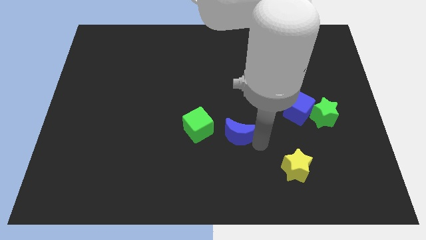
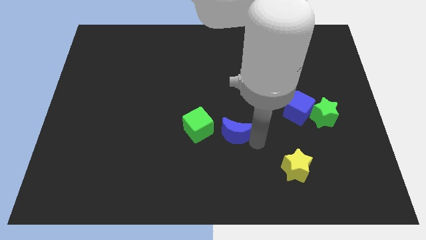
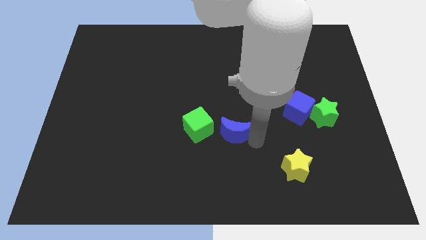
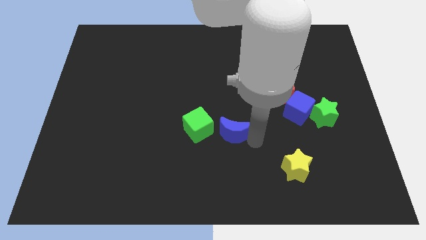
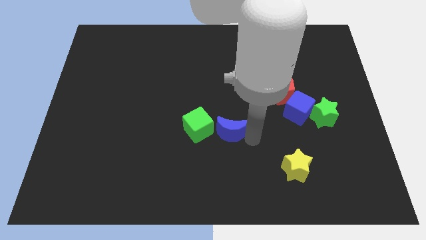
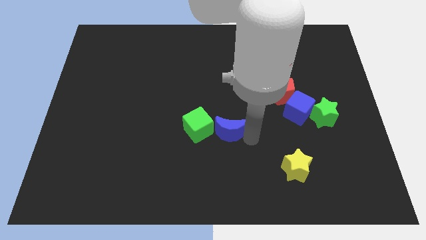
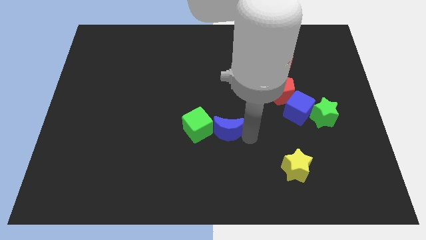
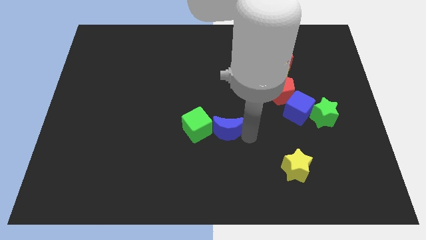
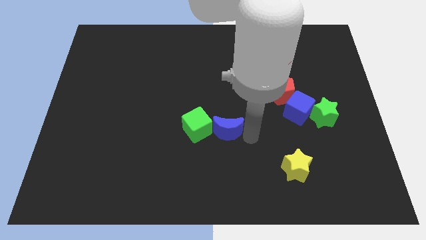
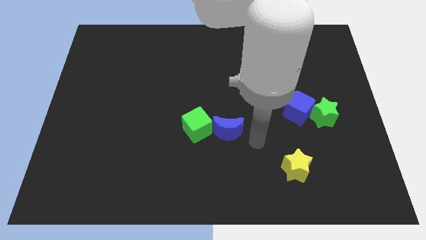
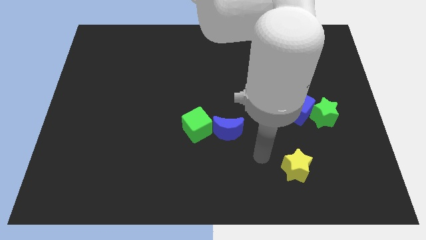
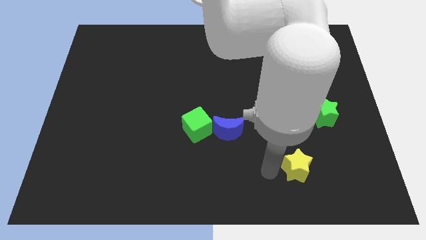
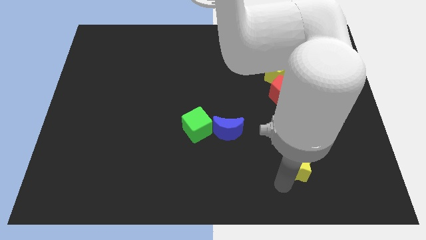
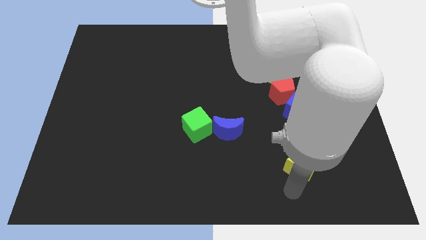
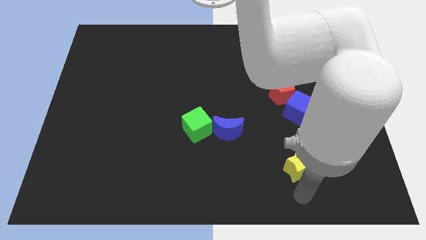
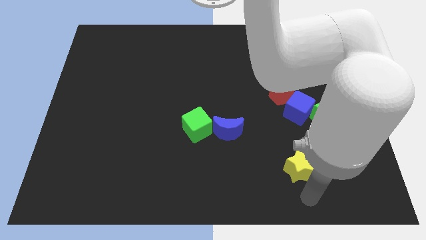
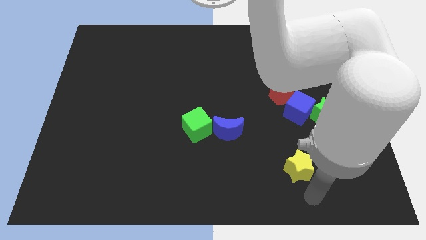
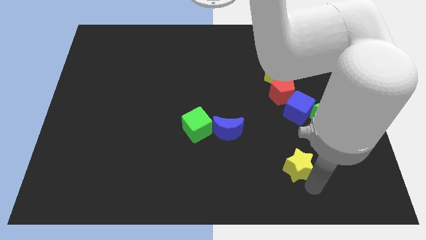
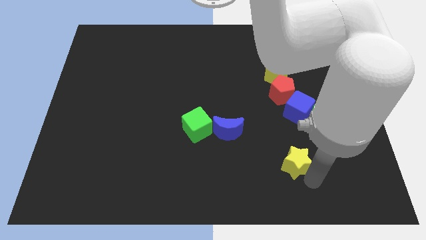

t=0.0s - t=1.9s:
put the blue moon on the right side of the green cube

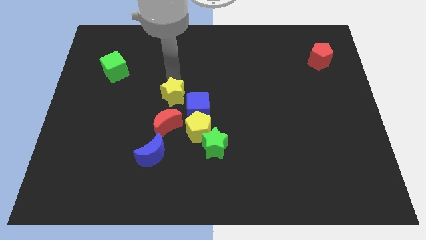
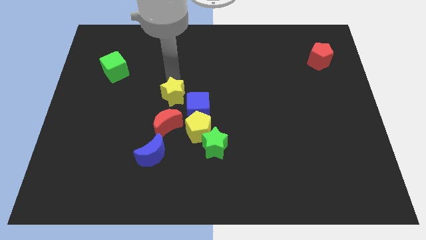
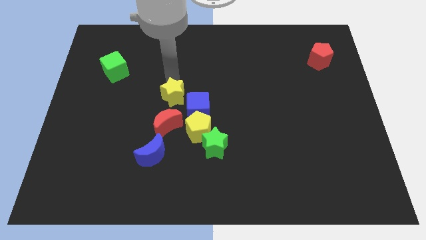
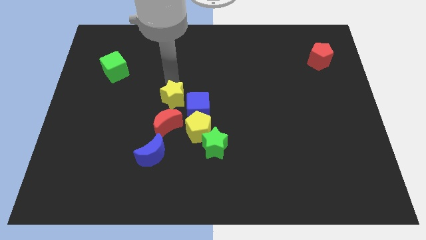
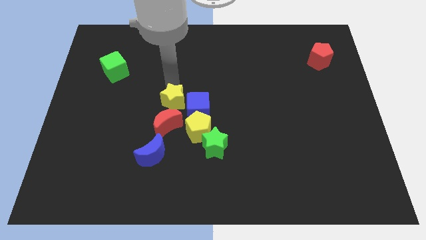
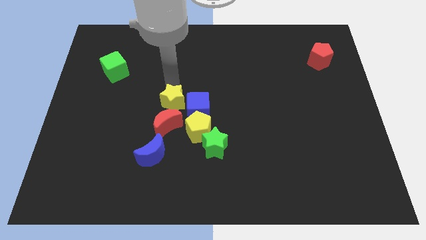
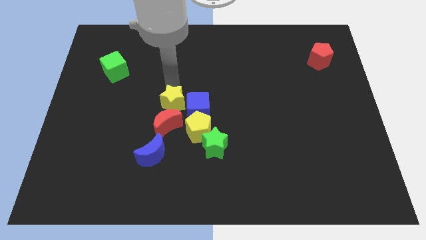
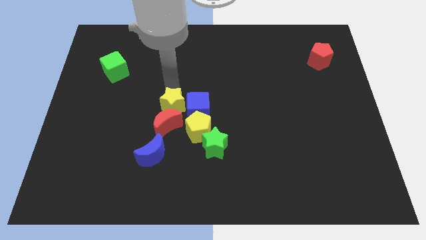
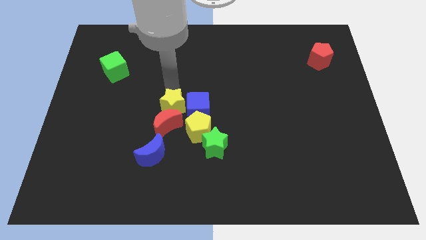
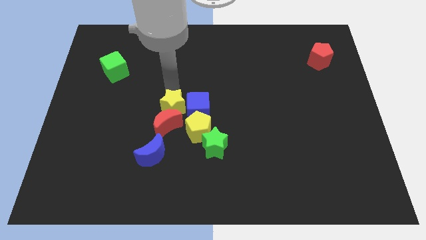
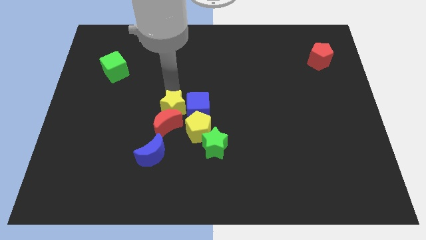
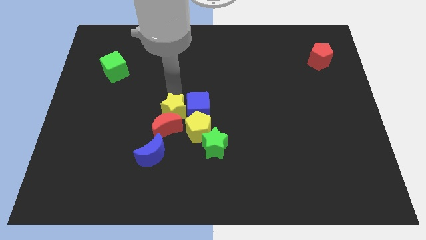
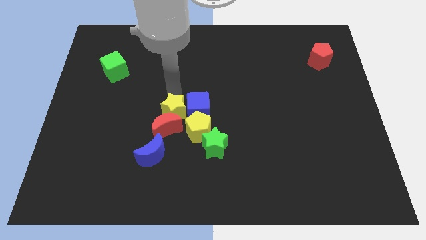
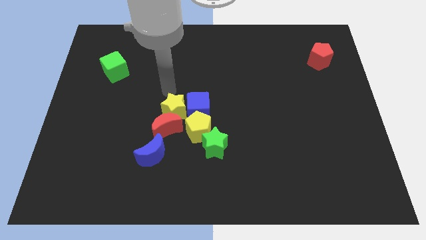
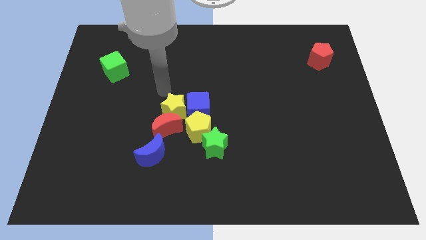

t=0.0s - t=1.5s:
push the yellow star into the red moon

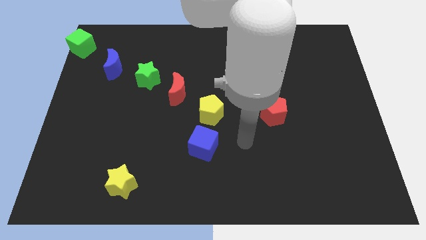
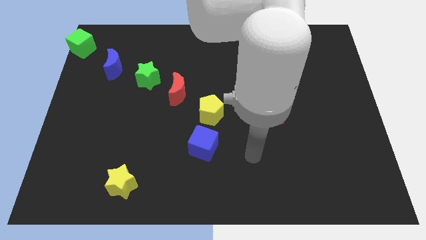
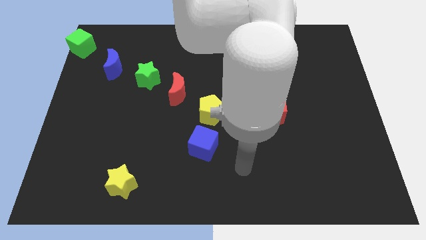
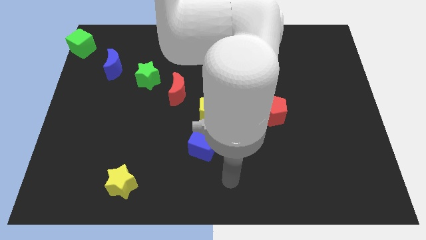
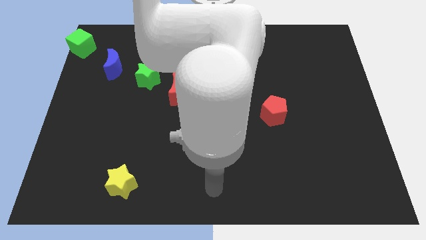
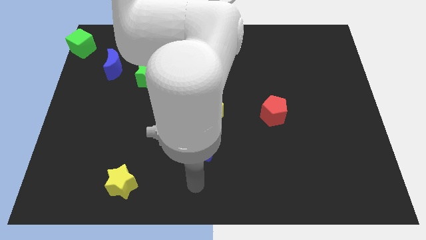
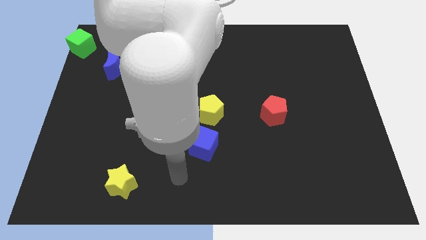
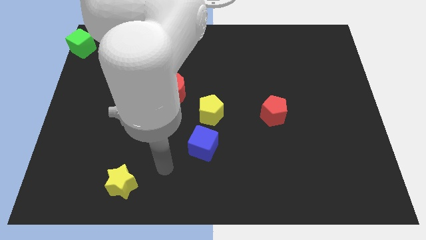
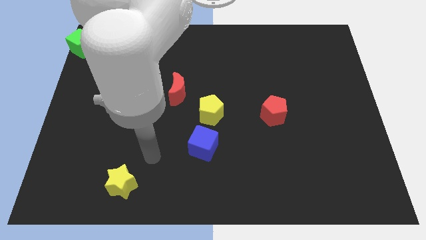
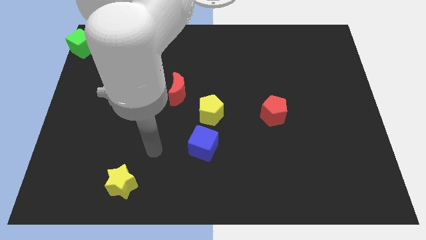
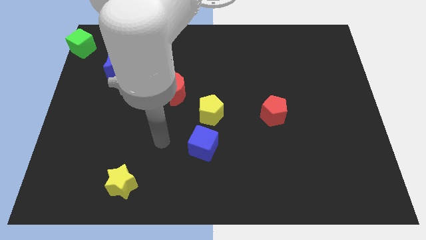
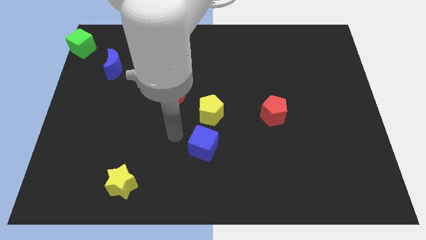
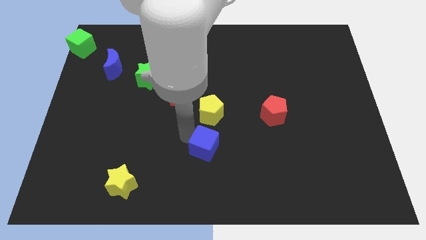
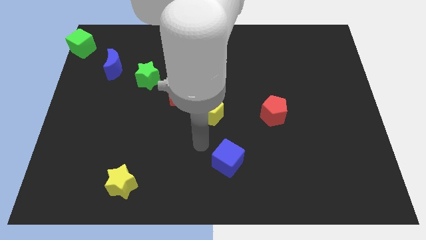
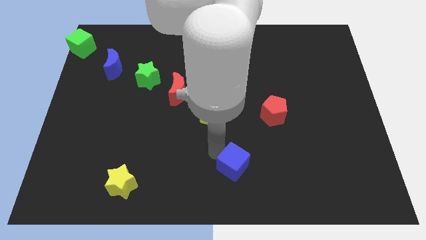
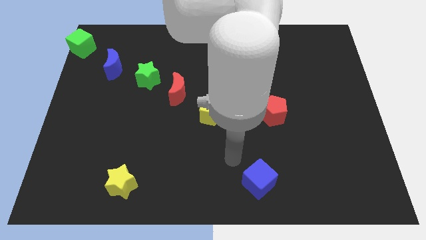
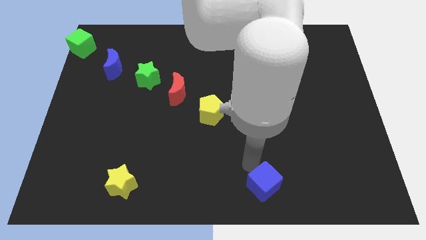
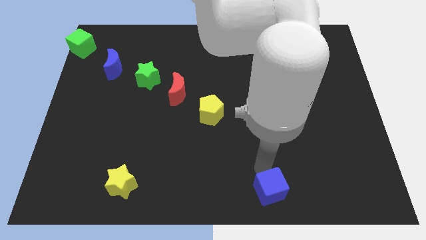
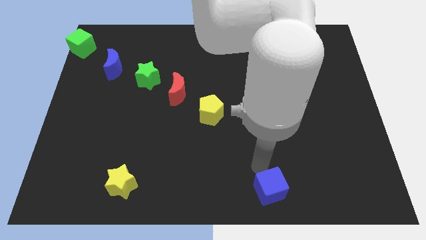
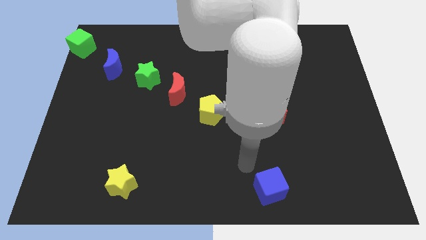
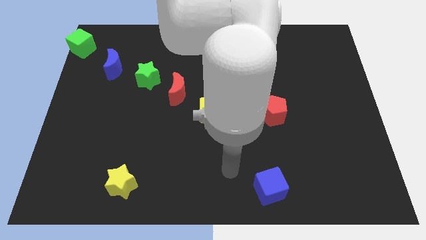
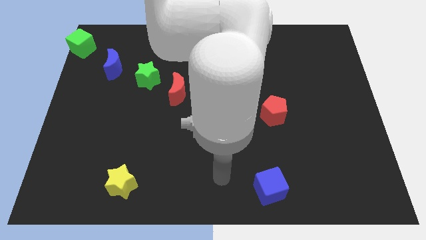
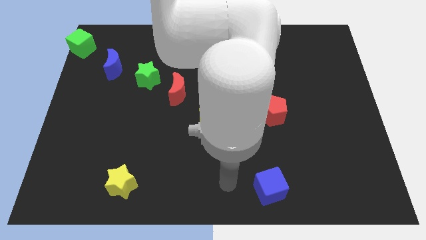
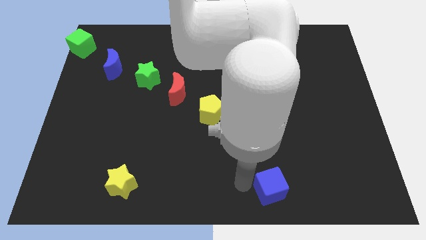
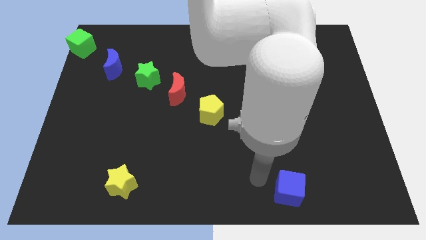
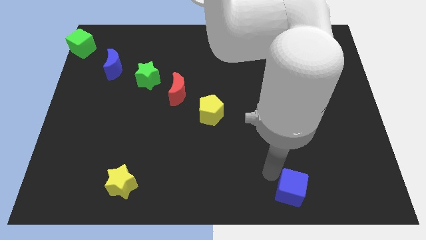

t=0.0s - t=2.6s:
put the blue cube to the bottom center

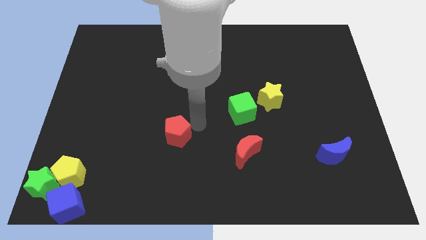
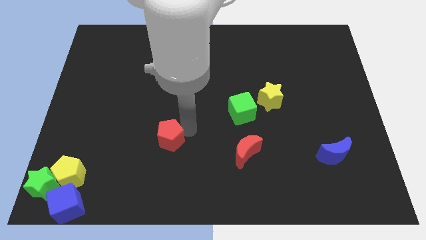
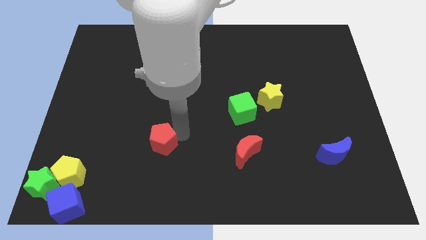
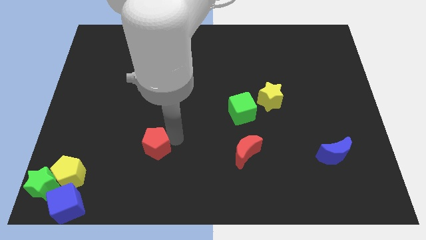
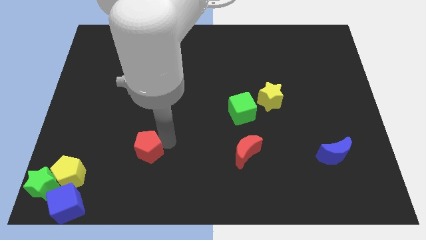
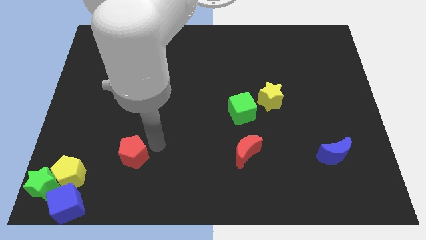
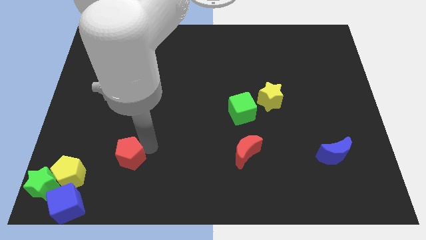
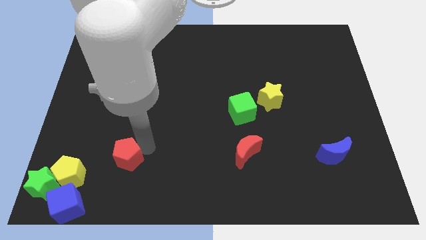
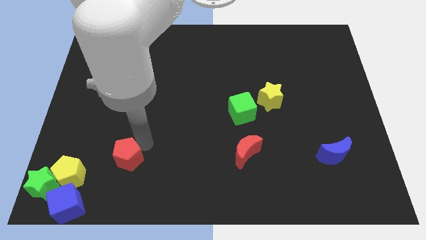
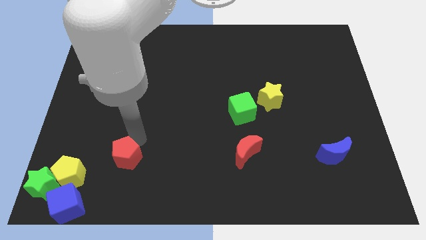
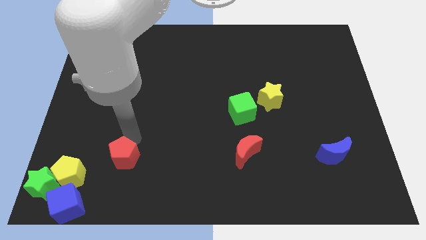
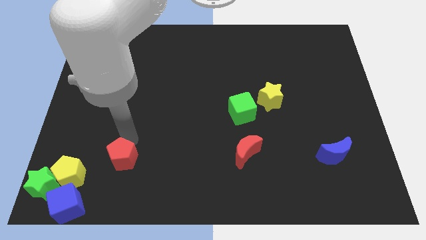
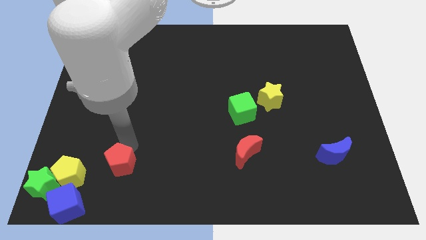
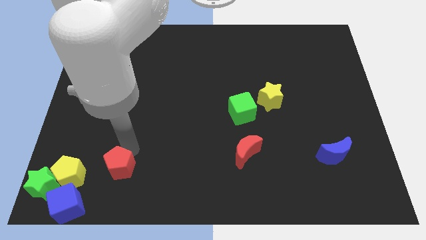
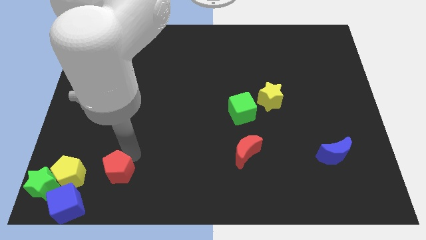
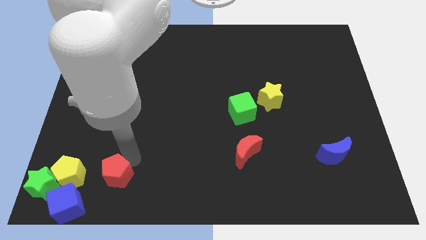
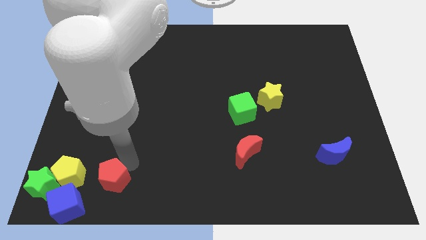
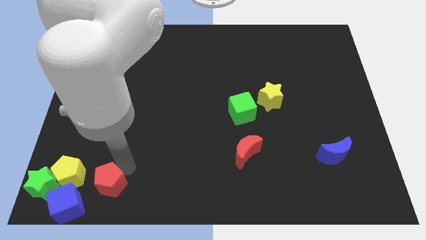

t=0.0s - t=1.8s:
move the red pentagon to the right of the yellow pentagon

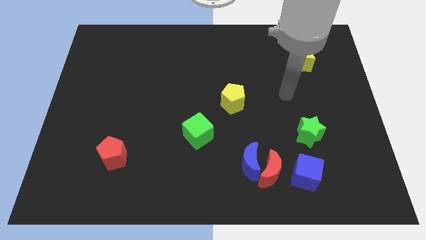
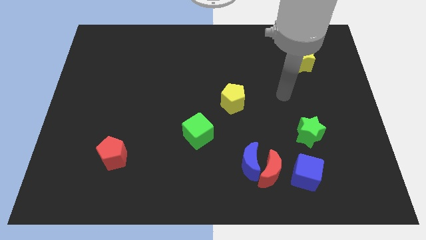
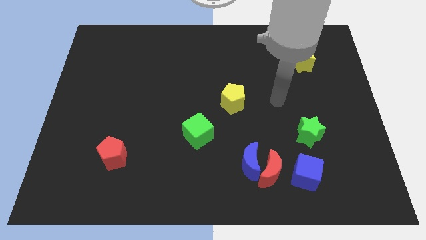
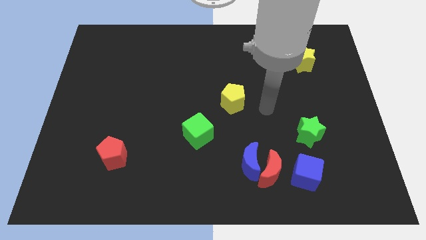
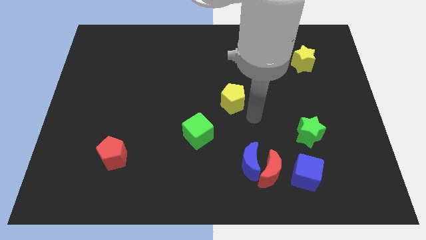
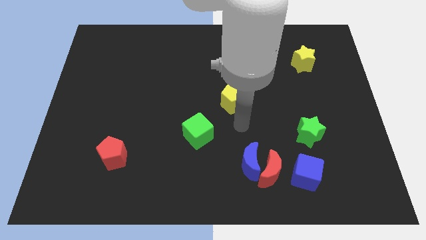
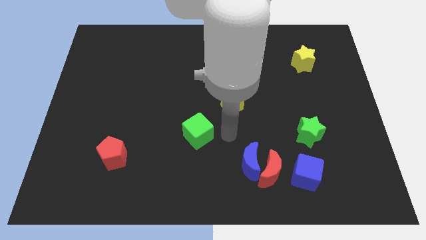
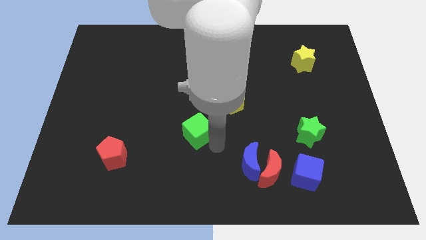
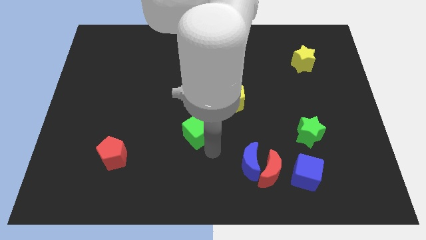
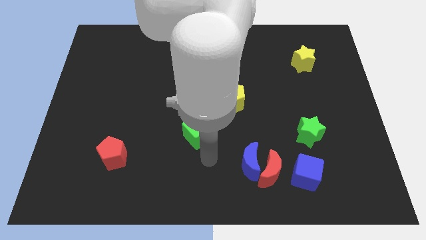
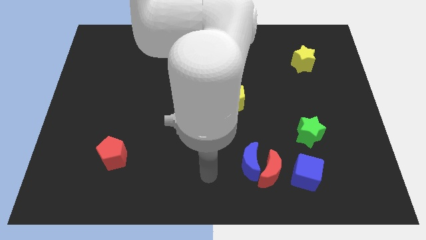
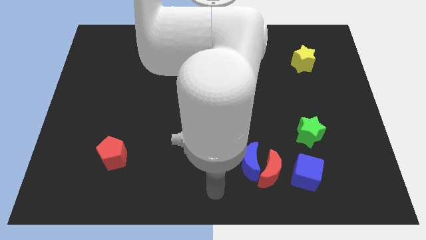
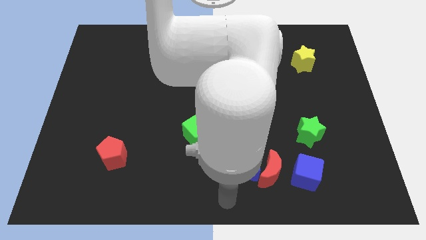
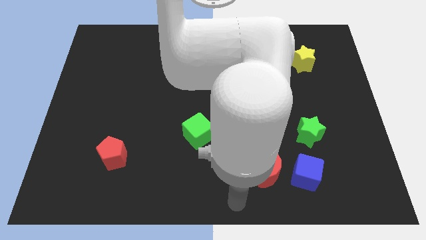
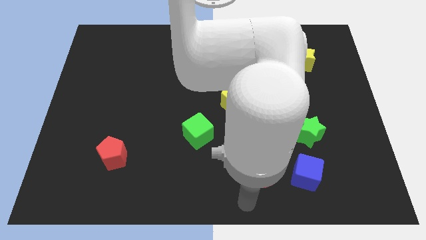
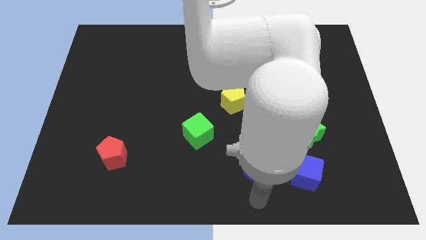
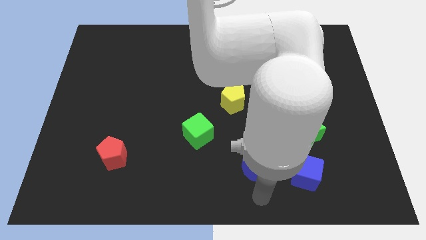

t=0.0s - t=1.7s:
place your hand vertically below the blue moon
